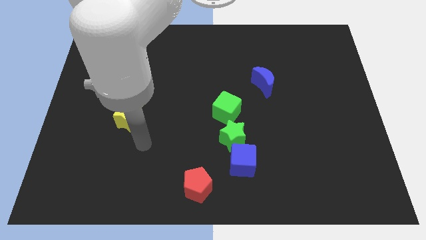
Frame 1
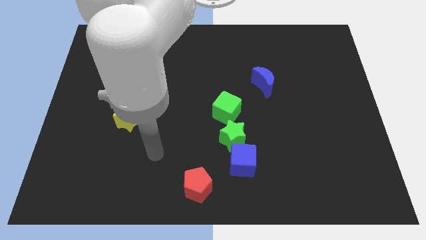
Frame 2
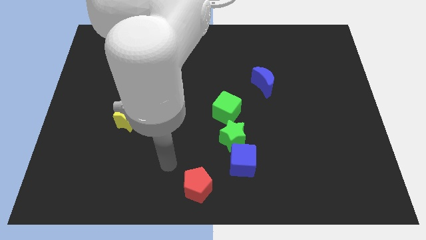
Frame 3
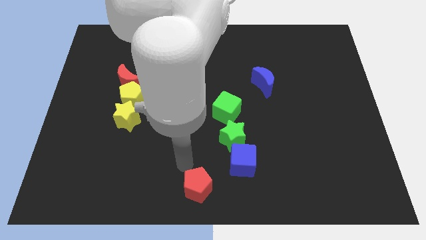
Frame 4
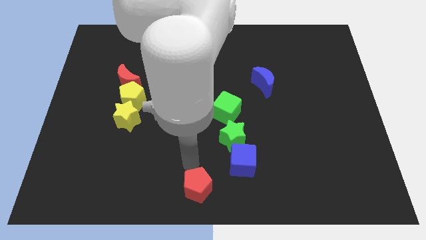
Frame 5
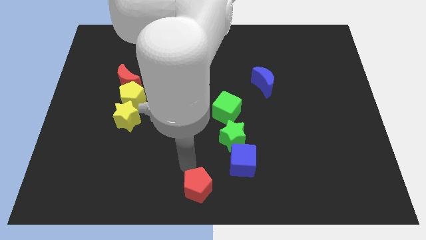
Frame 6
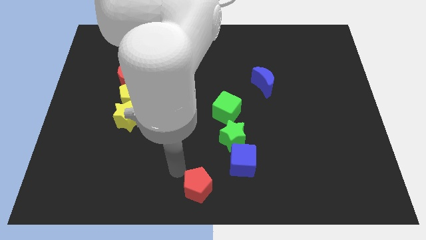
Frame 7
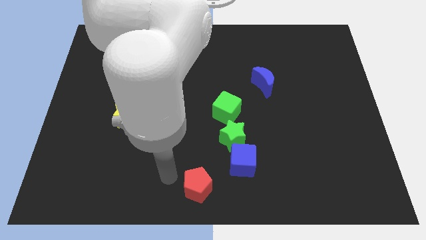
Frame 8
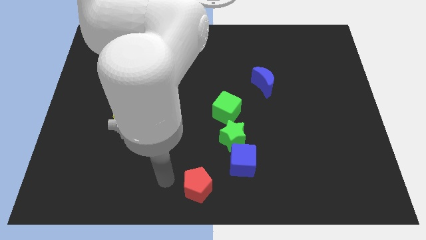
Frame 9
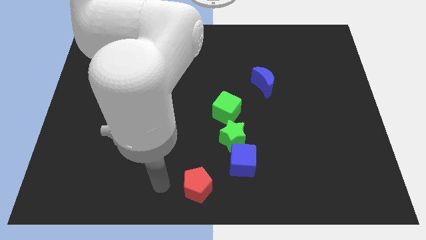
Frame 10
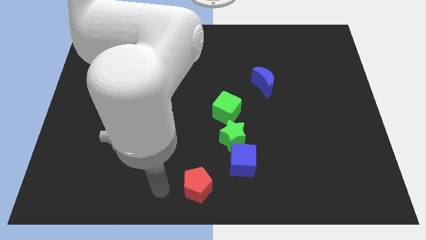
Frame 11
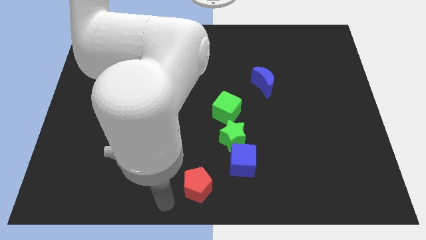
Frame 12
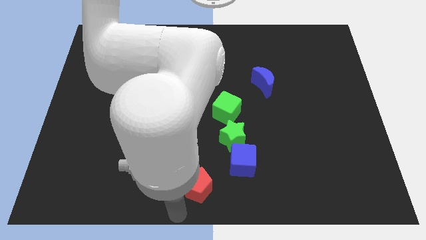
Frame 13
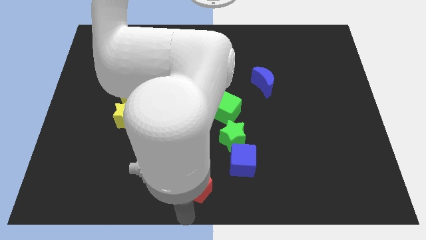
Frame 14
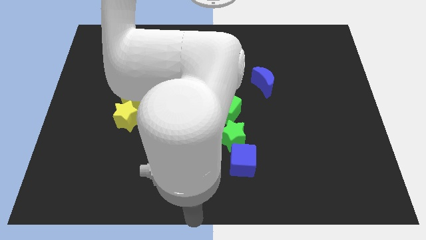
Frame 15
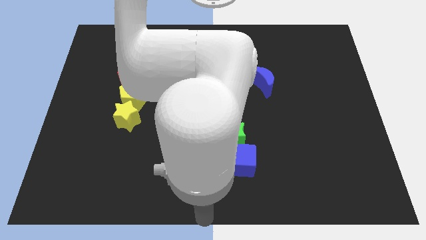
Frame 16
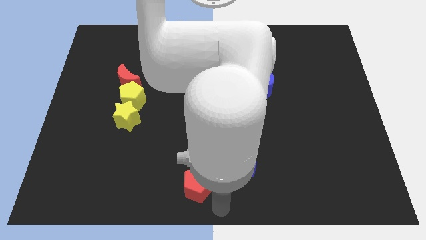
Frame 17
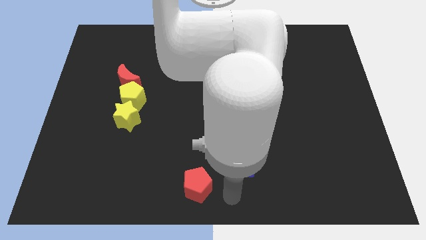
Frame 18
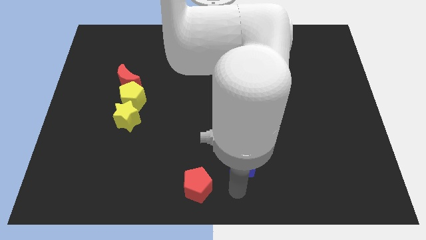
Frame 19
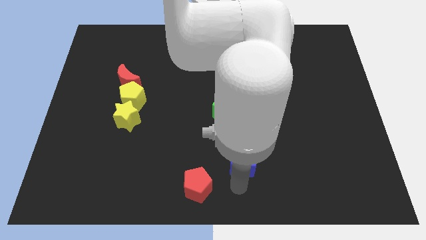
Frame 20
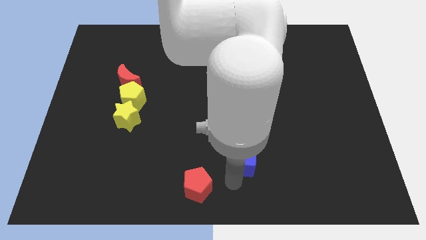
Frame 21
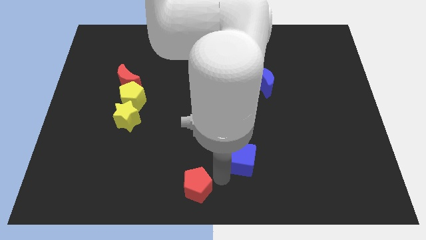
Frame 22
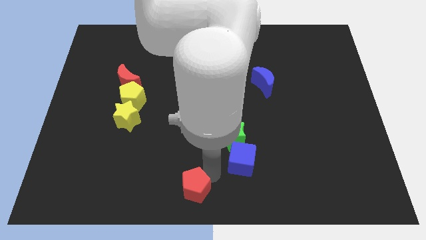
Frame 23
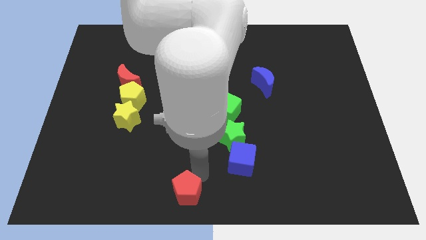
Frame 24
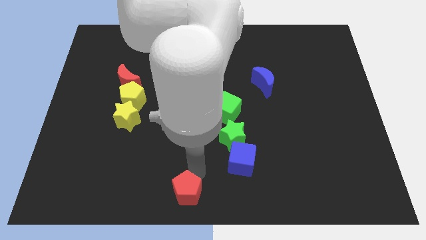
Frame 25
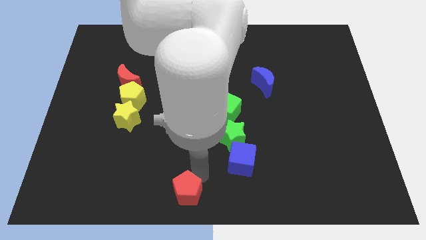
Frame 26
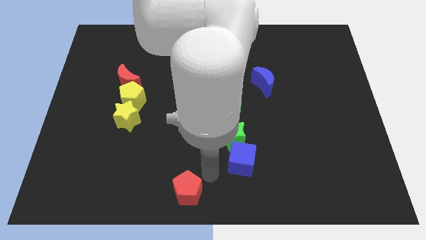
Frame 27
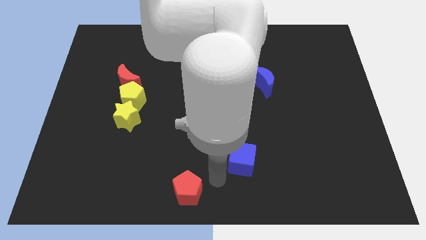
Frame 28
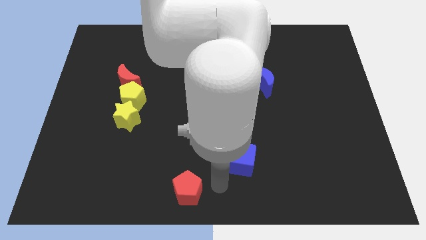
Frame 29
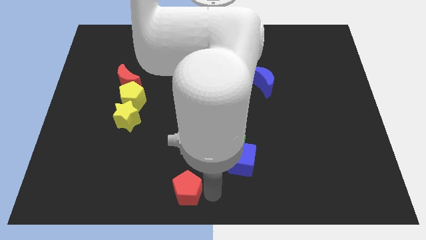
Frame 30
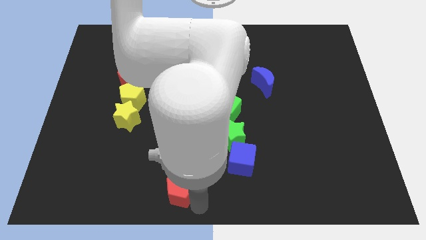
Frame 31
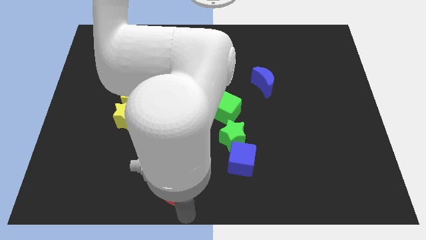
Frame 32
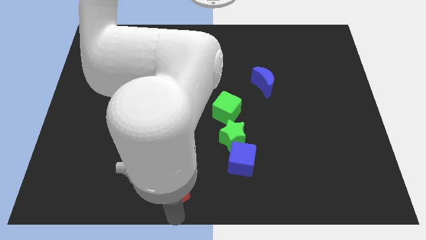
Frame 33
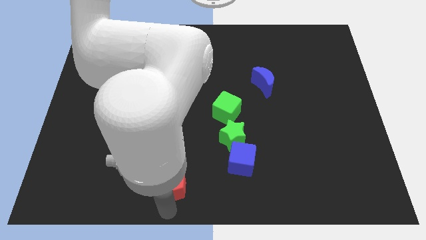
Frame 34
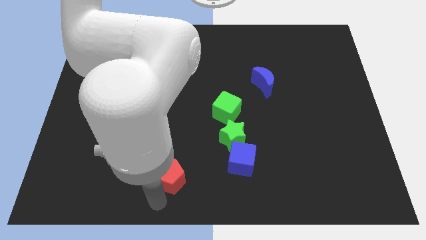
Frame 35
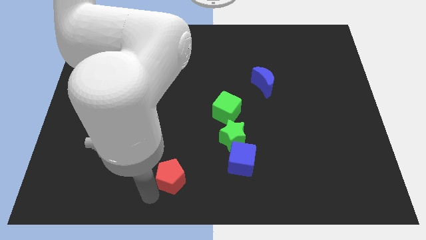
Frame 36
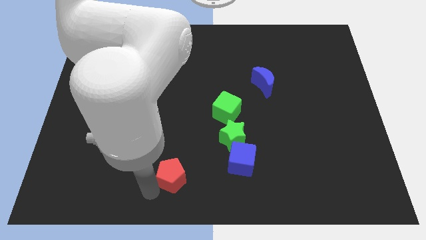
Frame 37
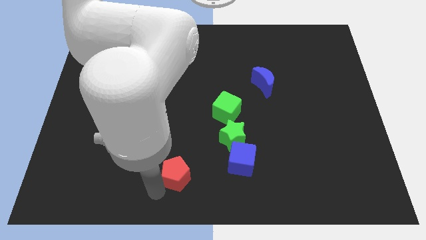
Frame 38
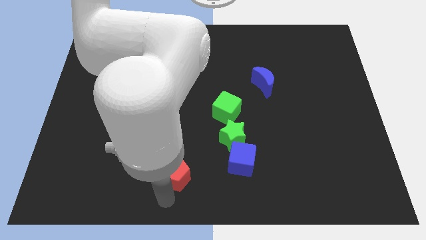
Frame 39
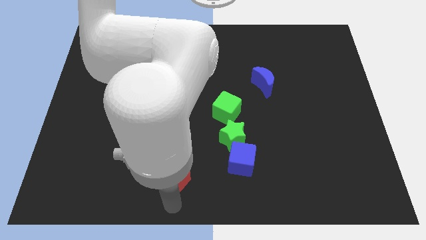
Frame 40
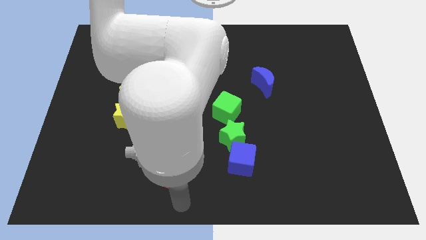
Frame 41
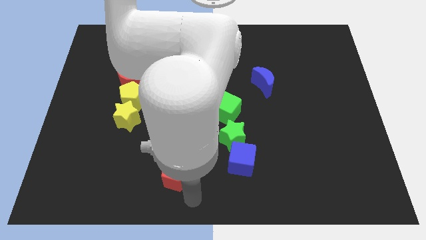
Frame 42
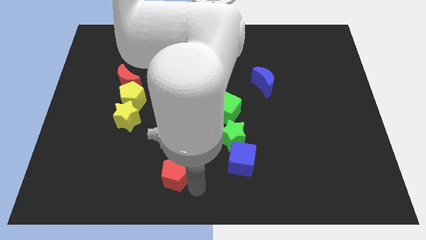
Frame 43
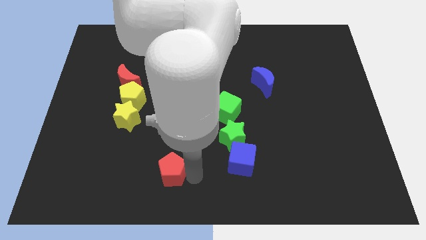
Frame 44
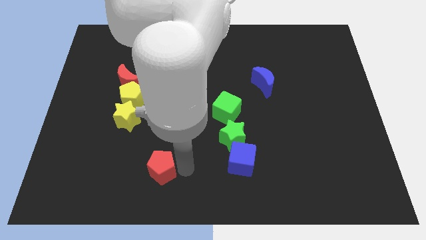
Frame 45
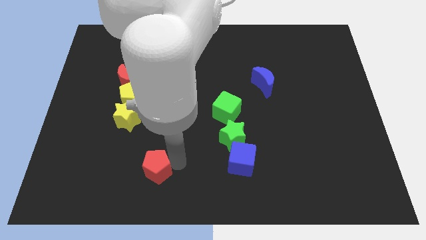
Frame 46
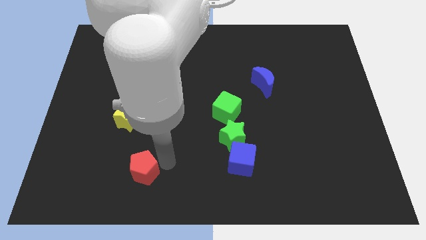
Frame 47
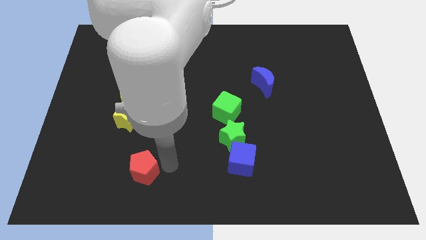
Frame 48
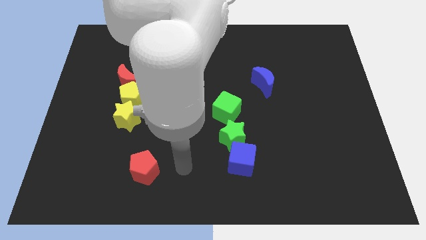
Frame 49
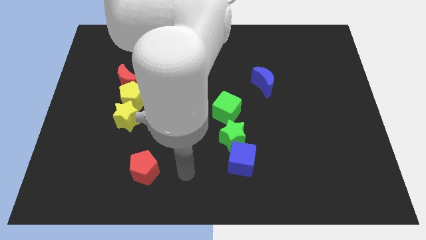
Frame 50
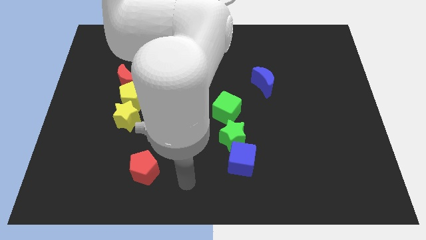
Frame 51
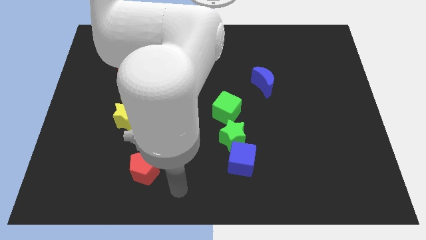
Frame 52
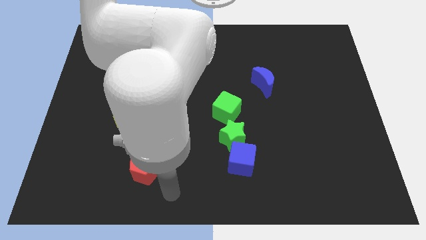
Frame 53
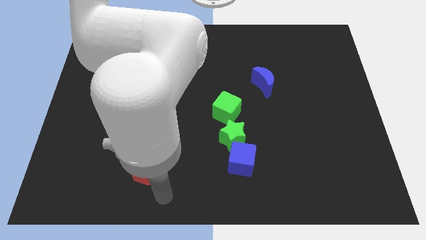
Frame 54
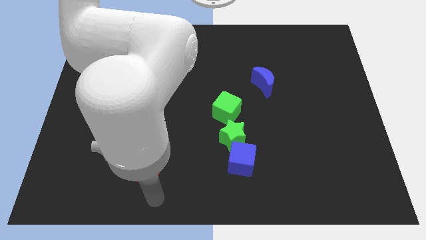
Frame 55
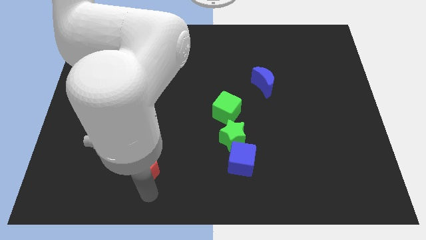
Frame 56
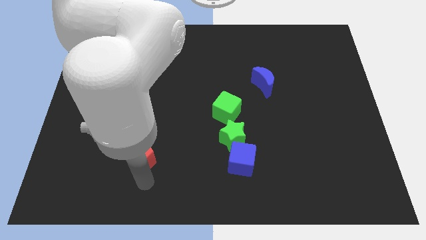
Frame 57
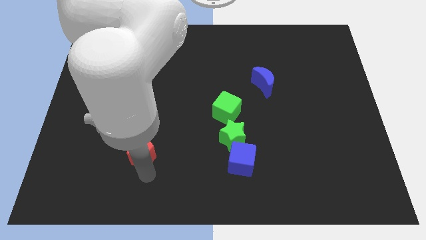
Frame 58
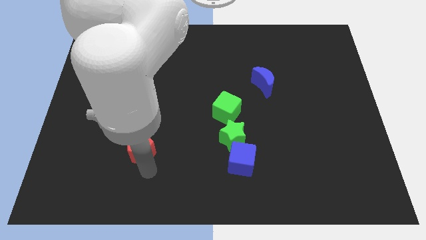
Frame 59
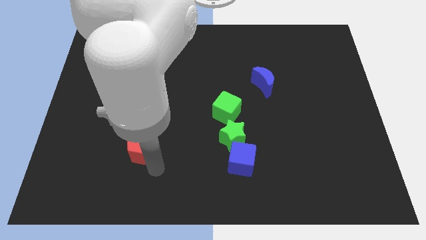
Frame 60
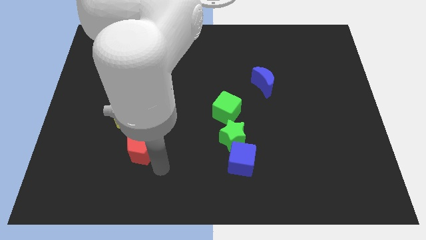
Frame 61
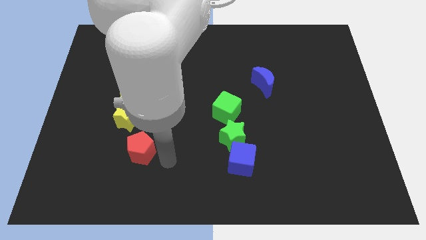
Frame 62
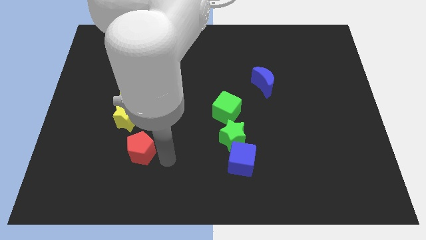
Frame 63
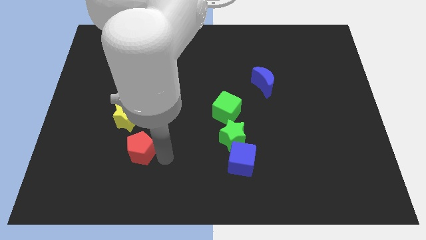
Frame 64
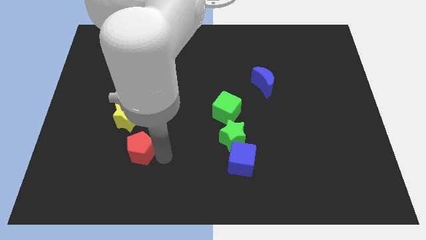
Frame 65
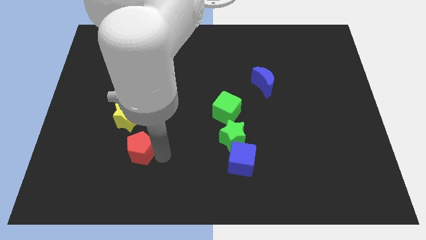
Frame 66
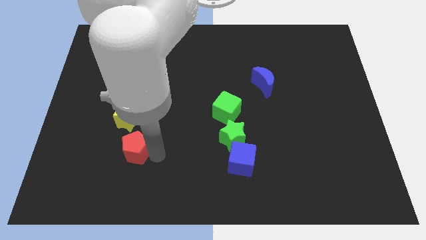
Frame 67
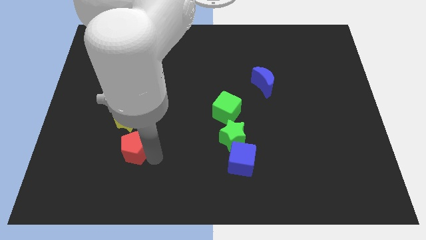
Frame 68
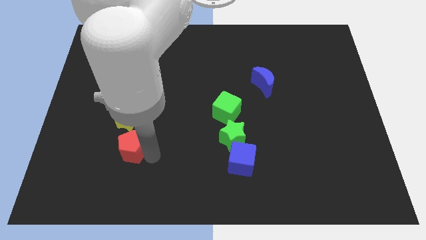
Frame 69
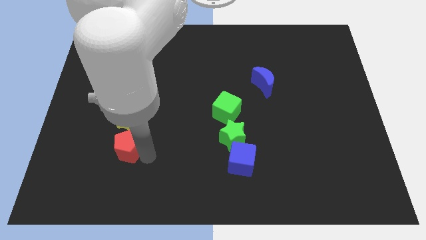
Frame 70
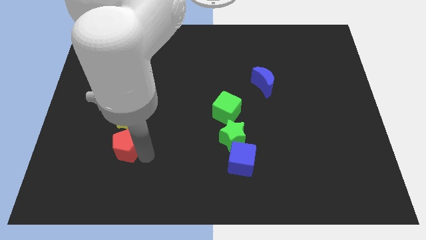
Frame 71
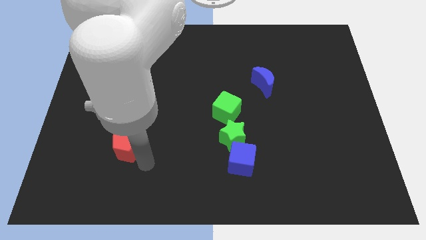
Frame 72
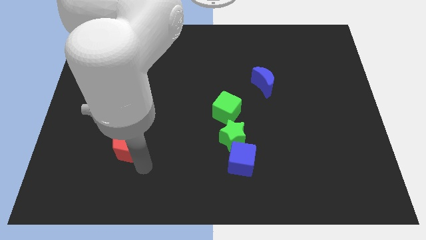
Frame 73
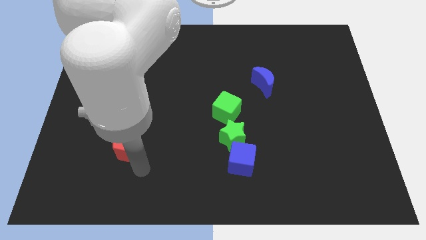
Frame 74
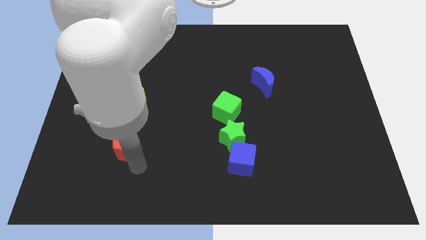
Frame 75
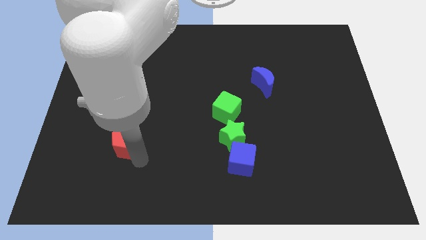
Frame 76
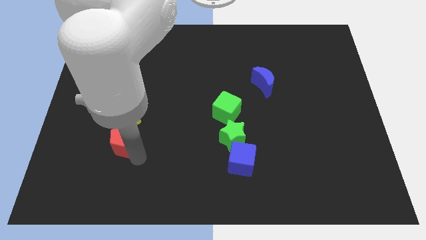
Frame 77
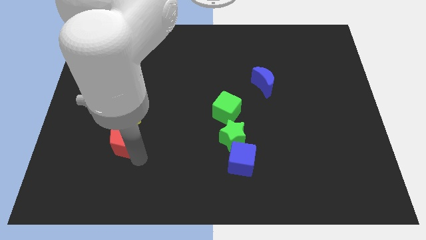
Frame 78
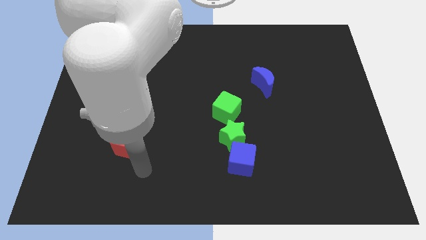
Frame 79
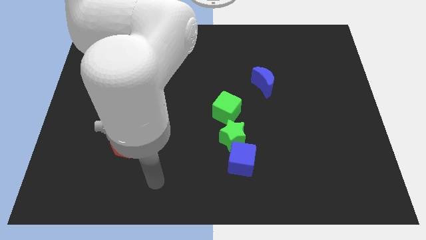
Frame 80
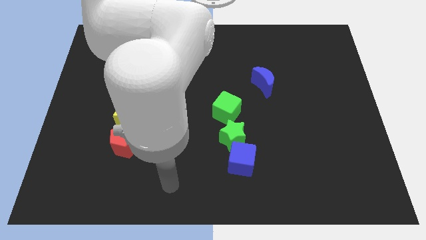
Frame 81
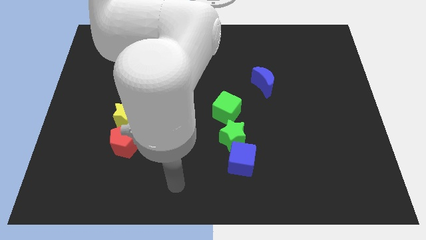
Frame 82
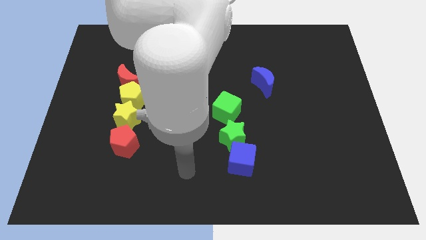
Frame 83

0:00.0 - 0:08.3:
place the red pentagon vertically below the yellow star

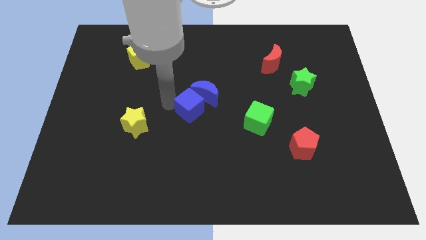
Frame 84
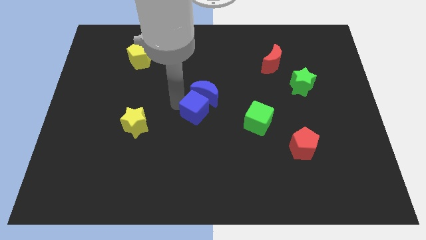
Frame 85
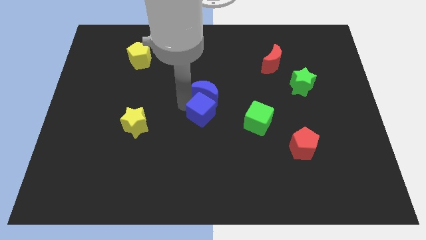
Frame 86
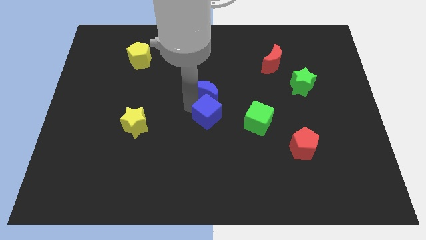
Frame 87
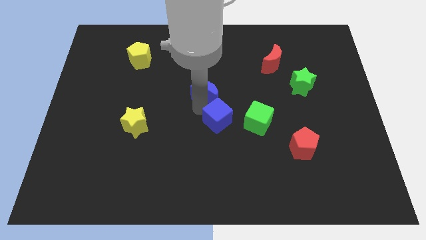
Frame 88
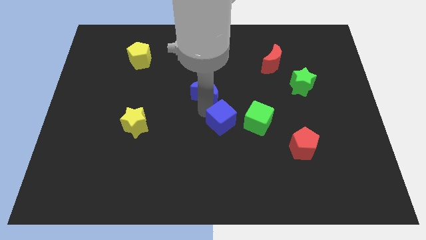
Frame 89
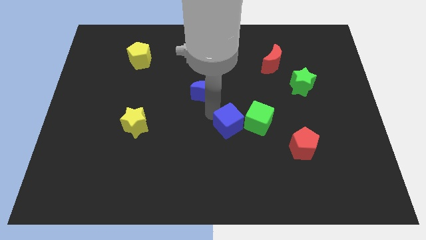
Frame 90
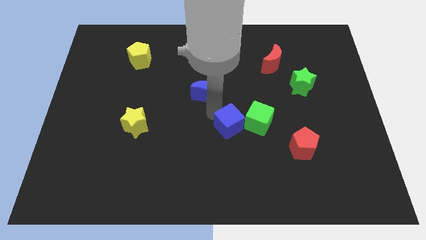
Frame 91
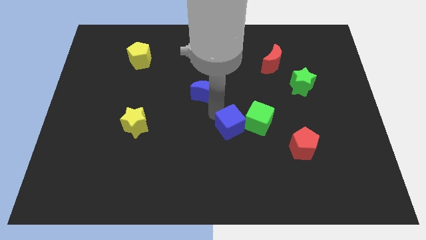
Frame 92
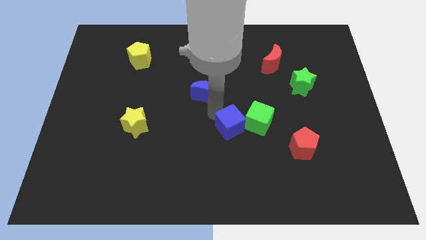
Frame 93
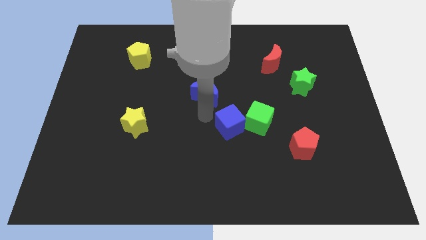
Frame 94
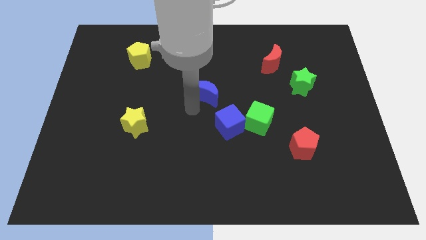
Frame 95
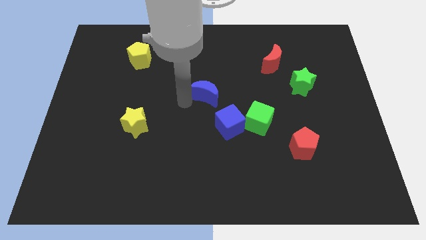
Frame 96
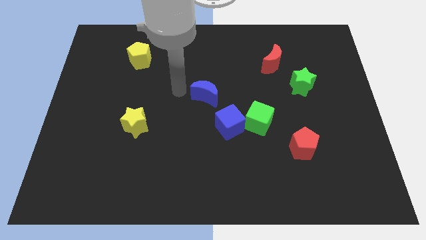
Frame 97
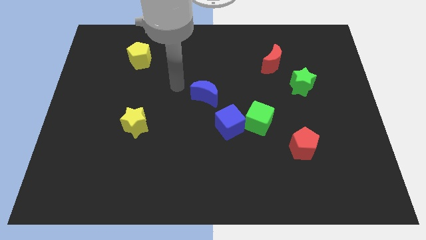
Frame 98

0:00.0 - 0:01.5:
place the blue cube to the left side of the green cube
